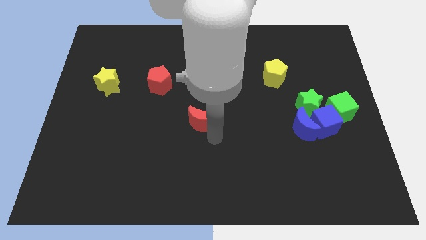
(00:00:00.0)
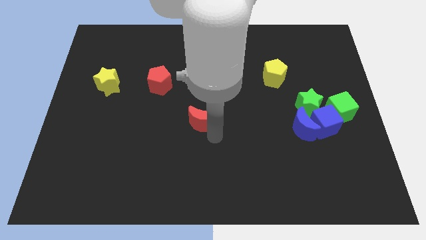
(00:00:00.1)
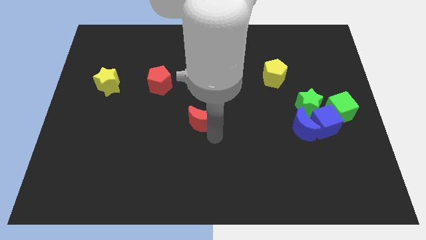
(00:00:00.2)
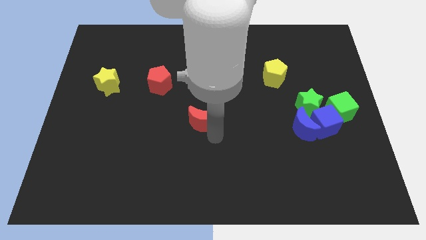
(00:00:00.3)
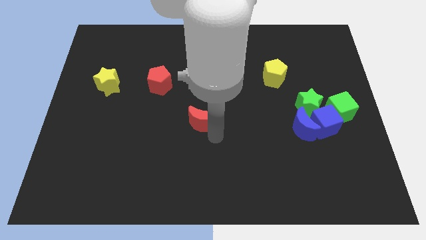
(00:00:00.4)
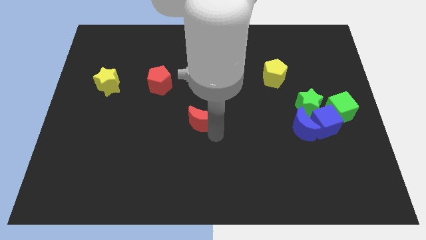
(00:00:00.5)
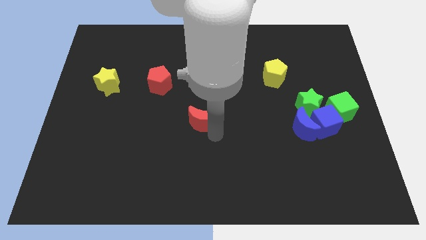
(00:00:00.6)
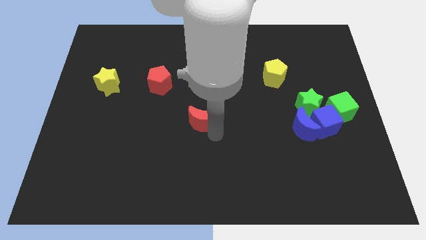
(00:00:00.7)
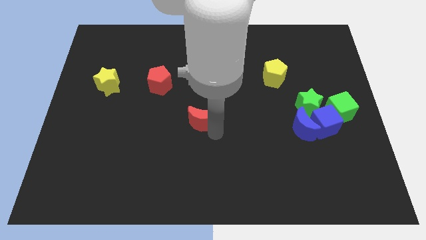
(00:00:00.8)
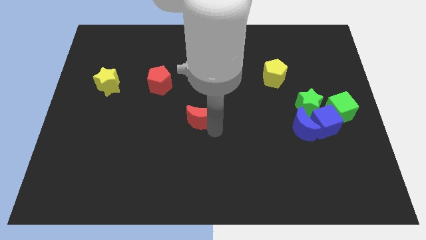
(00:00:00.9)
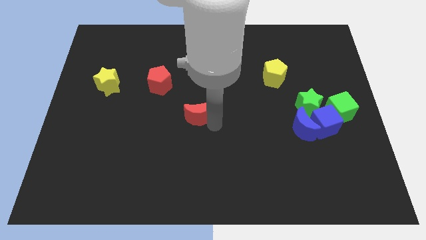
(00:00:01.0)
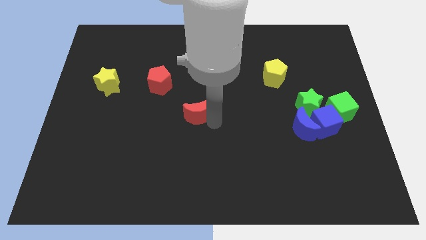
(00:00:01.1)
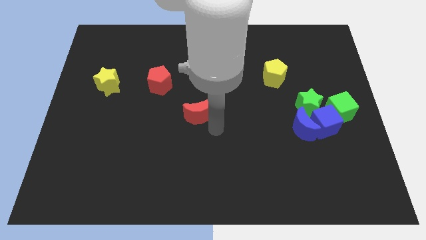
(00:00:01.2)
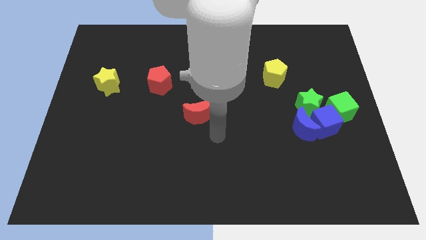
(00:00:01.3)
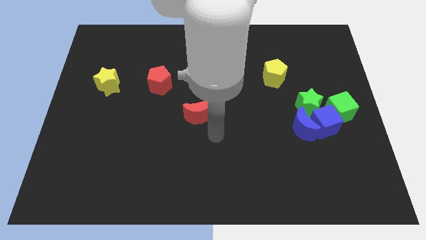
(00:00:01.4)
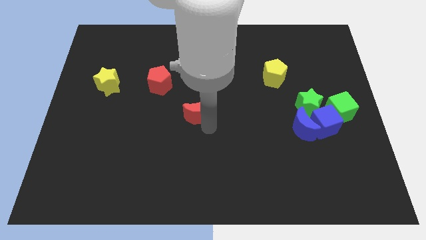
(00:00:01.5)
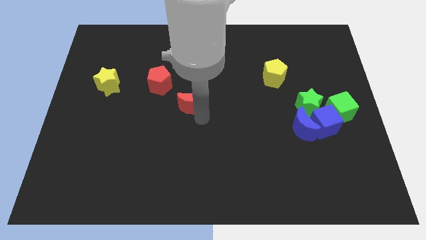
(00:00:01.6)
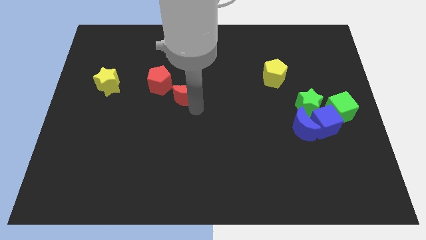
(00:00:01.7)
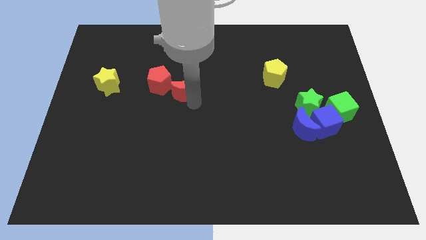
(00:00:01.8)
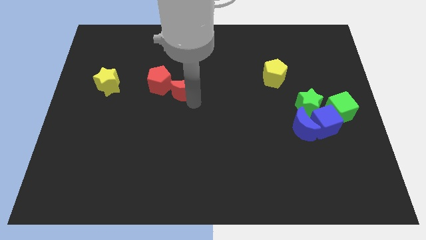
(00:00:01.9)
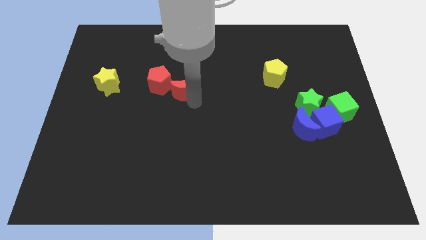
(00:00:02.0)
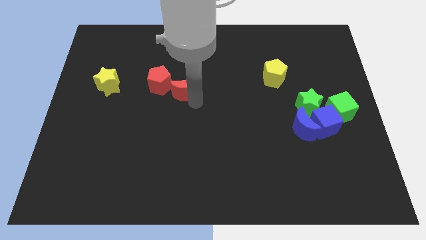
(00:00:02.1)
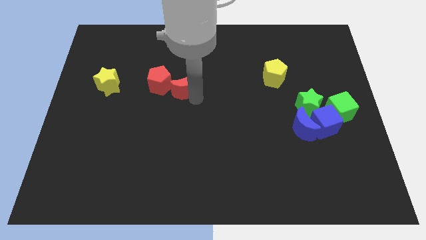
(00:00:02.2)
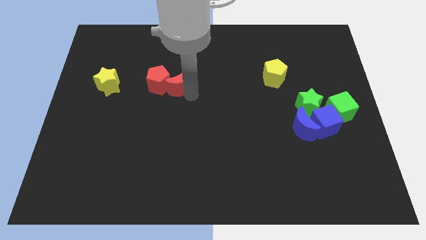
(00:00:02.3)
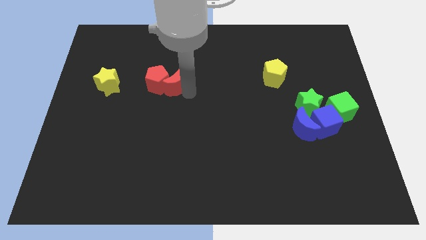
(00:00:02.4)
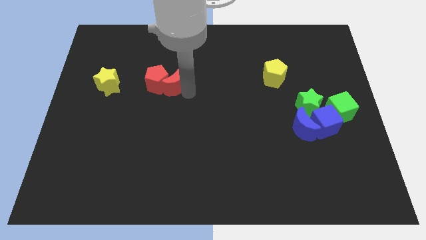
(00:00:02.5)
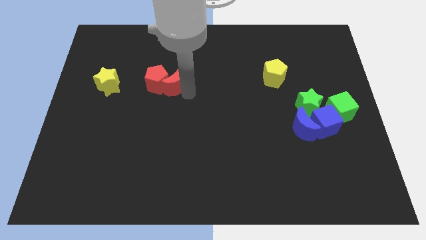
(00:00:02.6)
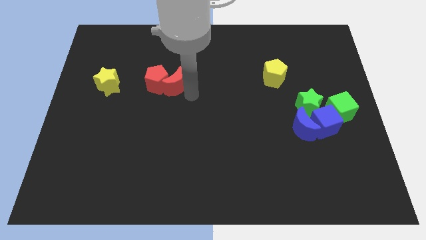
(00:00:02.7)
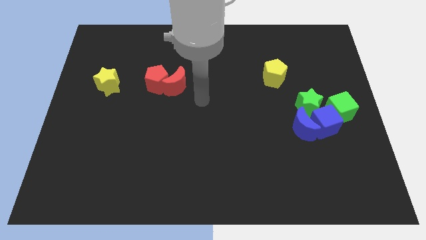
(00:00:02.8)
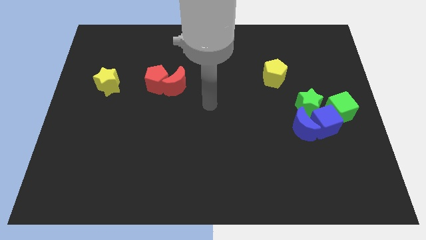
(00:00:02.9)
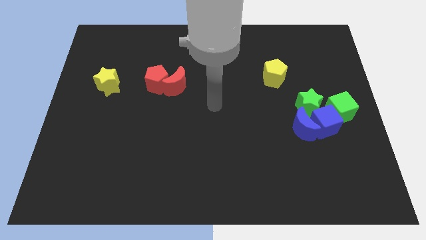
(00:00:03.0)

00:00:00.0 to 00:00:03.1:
push the red crescent into the red pentagon

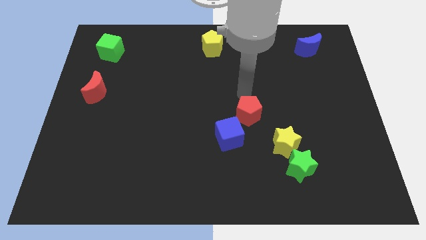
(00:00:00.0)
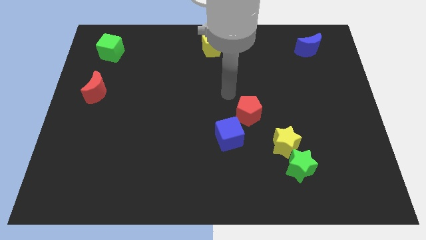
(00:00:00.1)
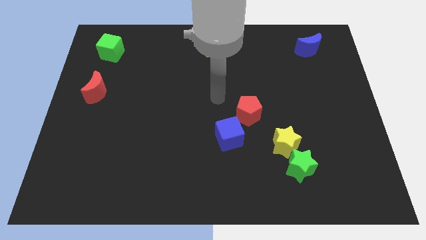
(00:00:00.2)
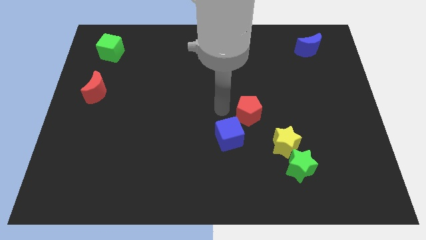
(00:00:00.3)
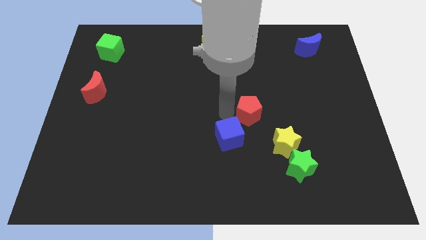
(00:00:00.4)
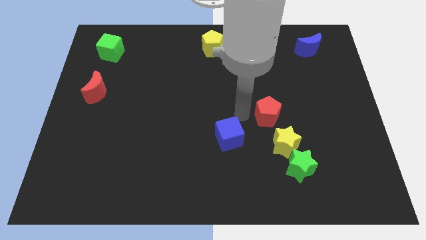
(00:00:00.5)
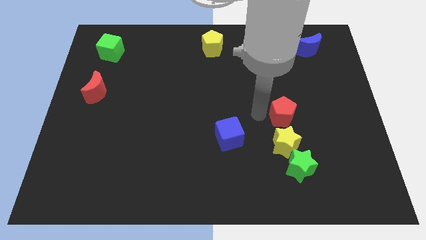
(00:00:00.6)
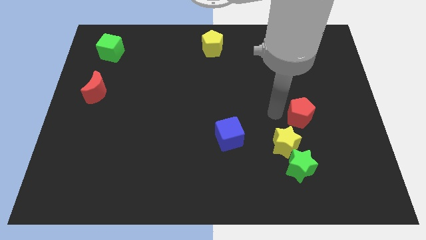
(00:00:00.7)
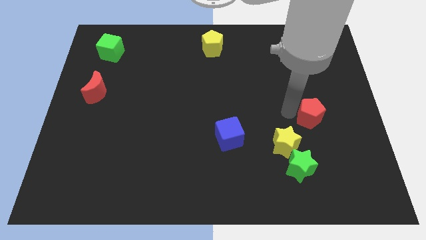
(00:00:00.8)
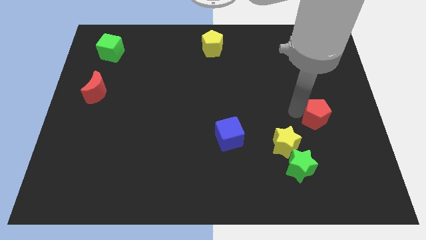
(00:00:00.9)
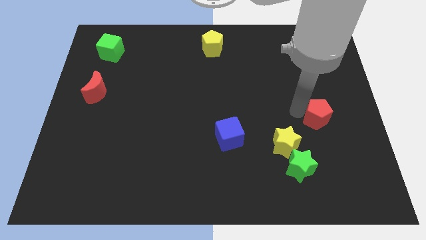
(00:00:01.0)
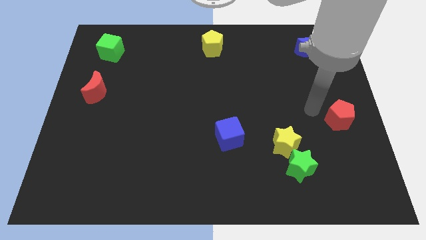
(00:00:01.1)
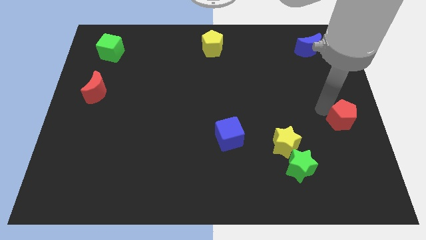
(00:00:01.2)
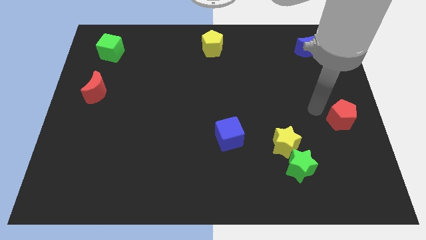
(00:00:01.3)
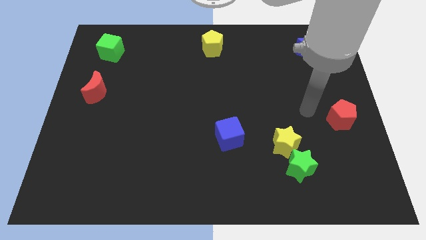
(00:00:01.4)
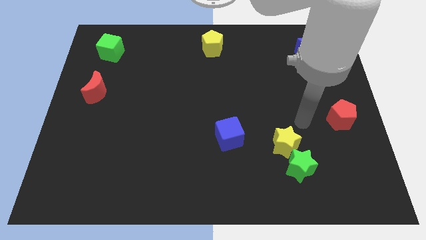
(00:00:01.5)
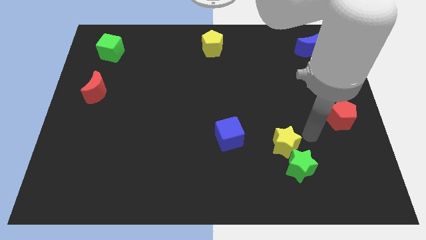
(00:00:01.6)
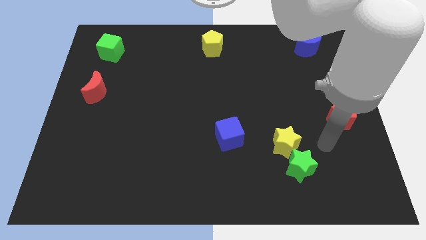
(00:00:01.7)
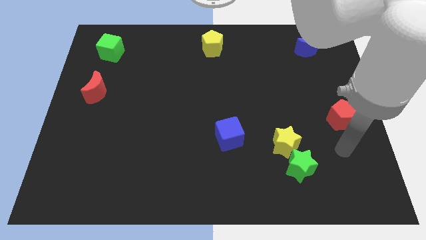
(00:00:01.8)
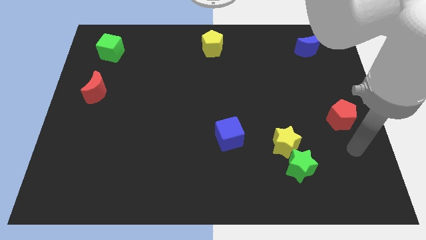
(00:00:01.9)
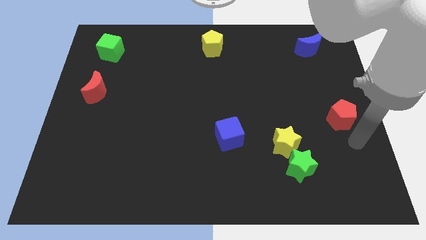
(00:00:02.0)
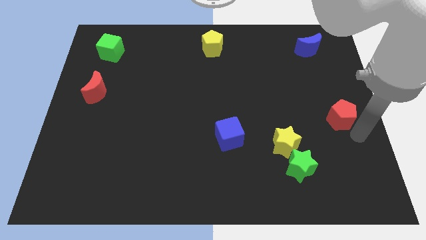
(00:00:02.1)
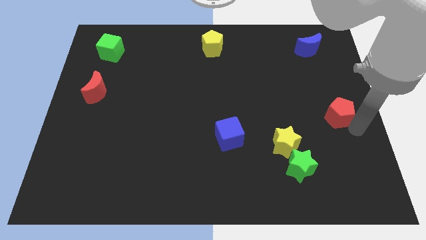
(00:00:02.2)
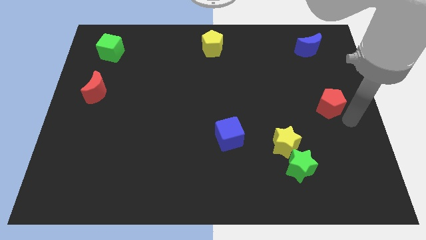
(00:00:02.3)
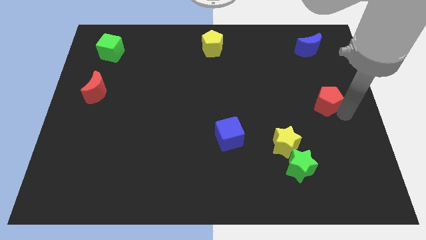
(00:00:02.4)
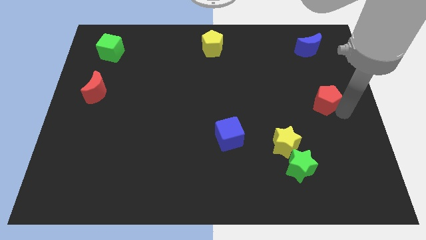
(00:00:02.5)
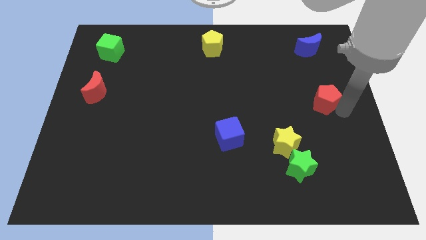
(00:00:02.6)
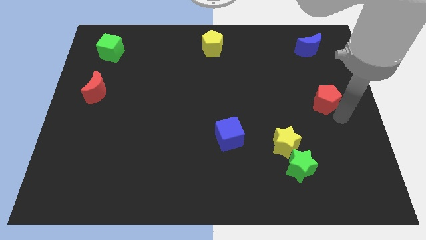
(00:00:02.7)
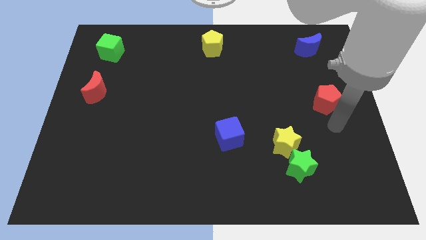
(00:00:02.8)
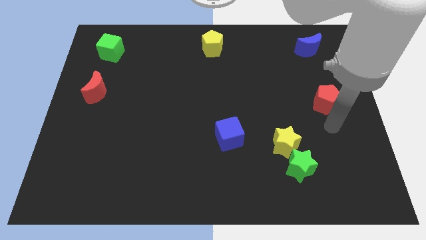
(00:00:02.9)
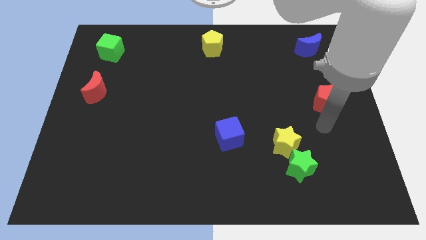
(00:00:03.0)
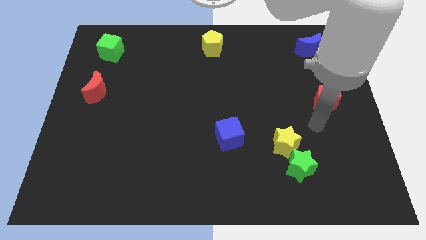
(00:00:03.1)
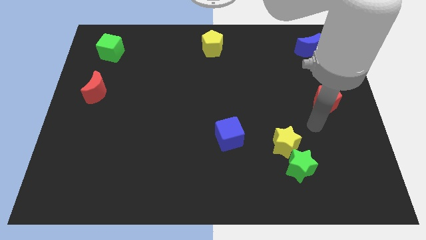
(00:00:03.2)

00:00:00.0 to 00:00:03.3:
drag red pentagon towards middle right of the board

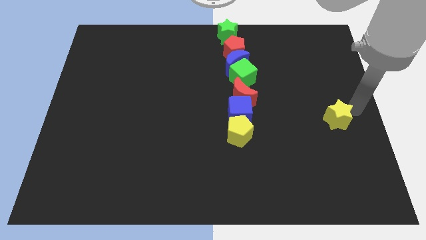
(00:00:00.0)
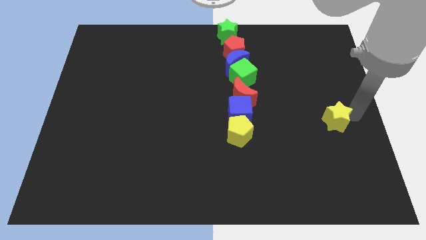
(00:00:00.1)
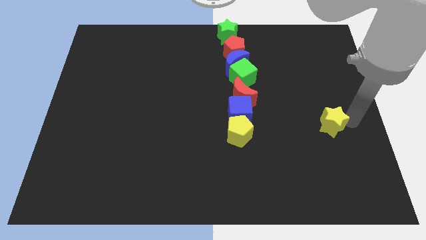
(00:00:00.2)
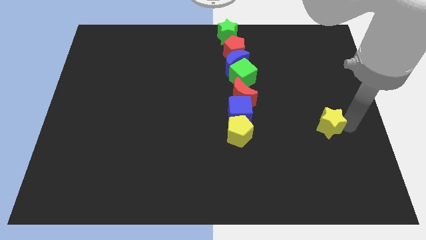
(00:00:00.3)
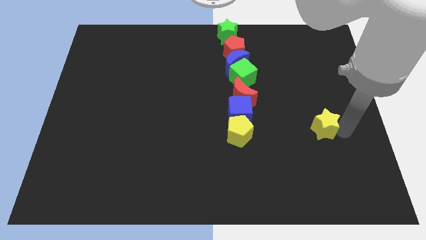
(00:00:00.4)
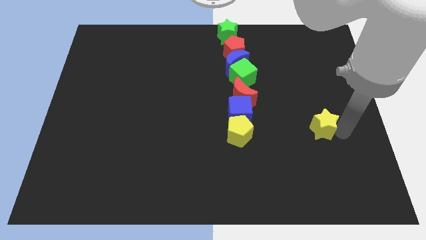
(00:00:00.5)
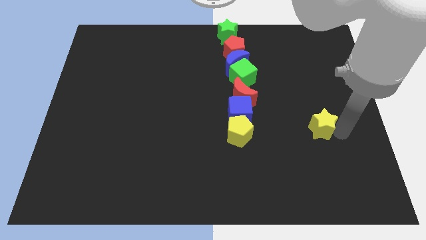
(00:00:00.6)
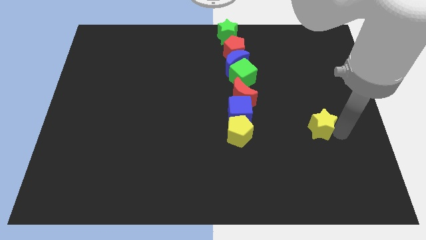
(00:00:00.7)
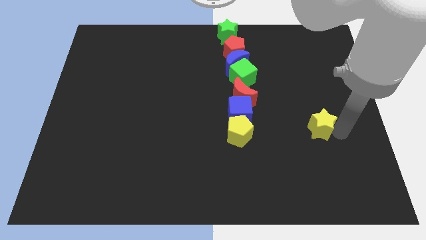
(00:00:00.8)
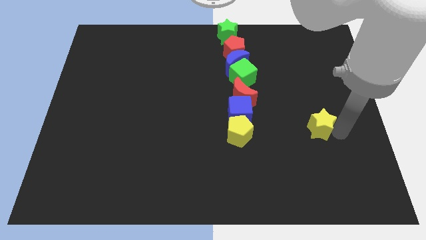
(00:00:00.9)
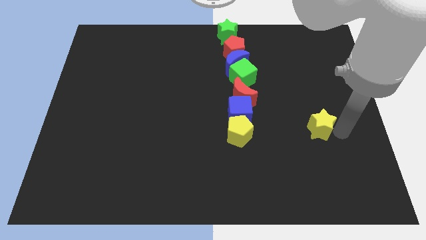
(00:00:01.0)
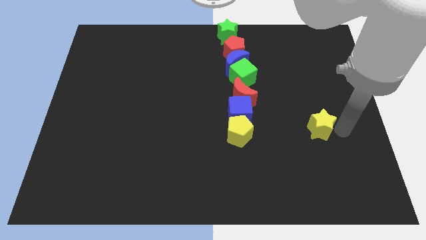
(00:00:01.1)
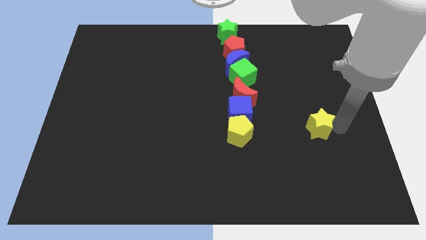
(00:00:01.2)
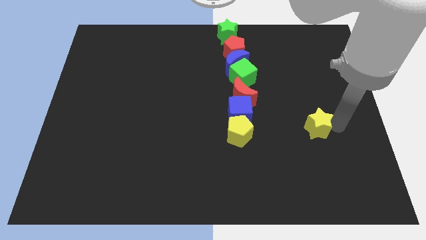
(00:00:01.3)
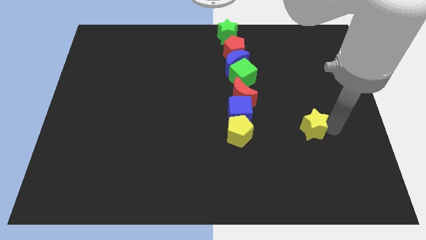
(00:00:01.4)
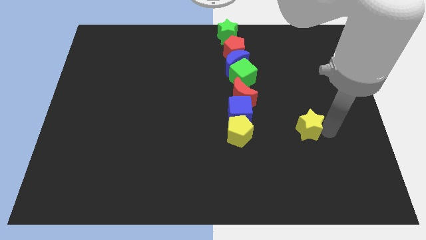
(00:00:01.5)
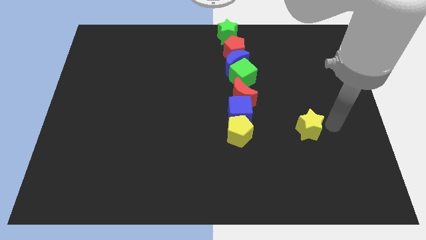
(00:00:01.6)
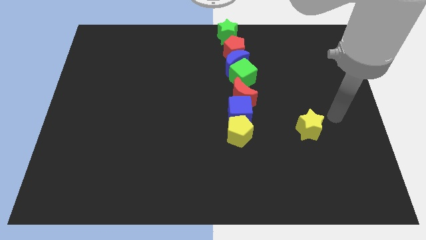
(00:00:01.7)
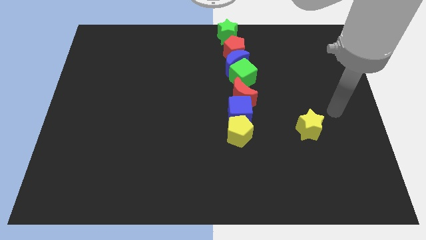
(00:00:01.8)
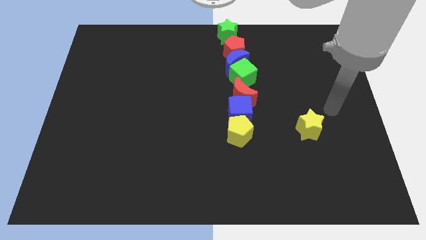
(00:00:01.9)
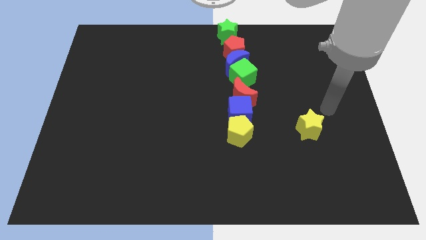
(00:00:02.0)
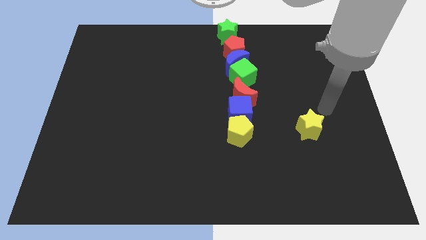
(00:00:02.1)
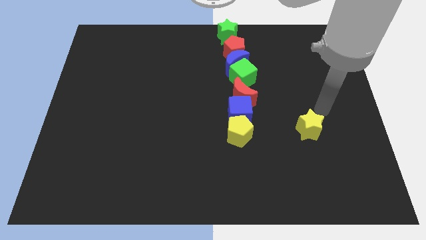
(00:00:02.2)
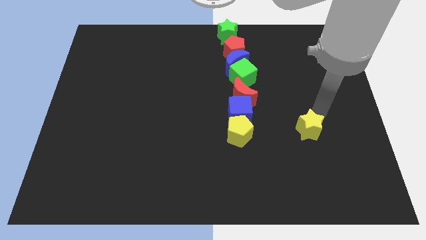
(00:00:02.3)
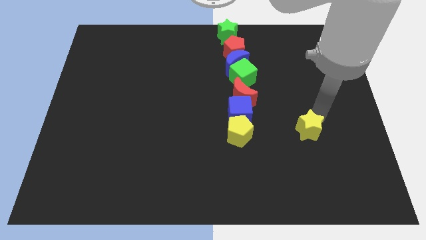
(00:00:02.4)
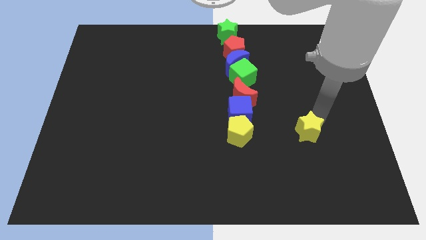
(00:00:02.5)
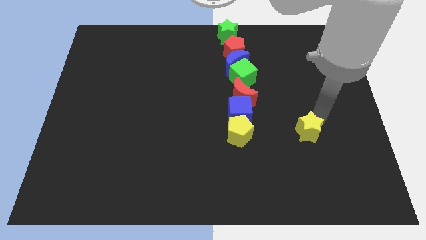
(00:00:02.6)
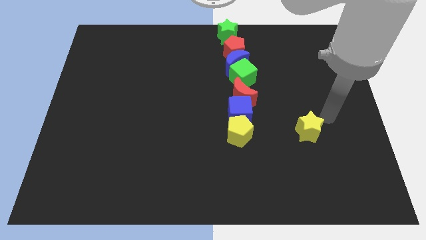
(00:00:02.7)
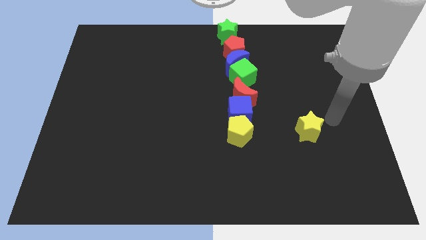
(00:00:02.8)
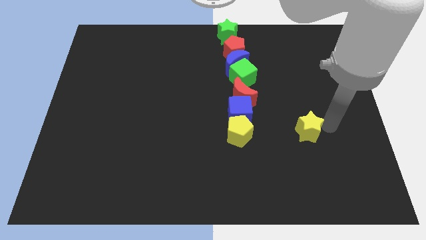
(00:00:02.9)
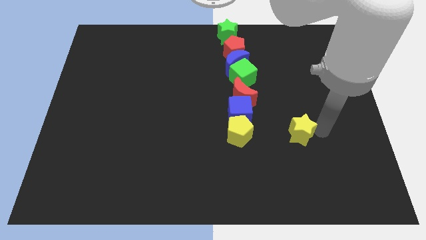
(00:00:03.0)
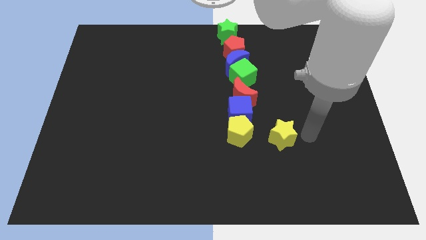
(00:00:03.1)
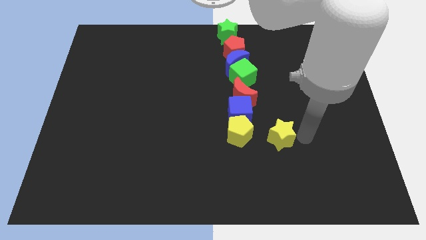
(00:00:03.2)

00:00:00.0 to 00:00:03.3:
place the yellow star to the right side of the yellow pentagon
